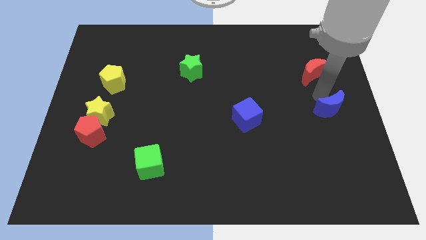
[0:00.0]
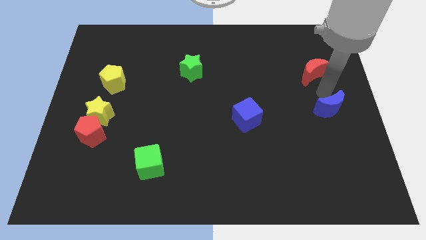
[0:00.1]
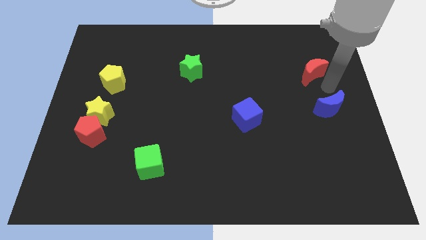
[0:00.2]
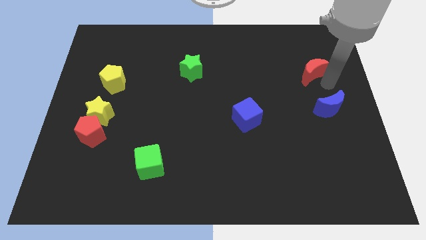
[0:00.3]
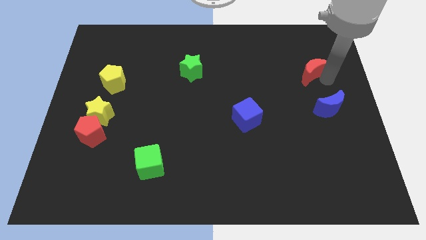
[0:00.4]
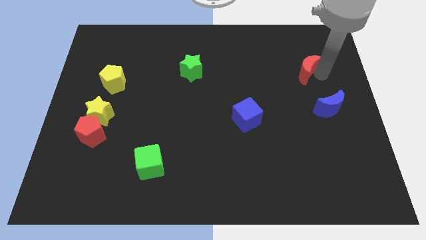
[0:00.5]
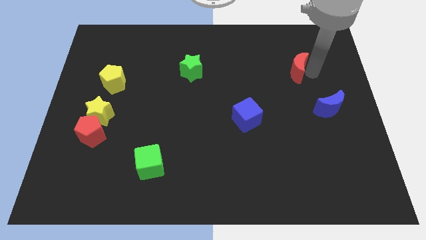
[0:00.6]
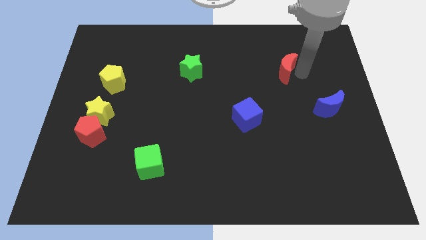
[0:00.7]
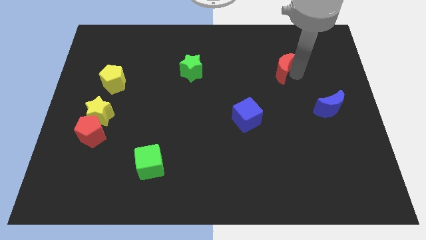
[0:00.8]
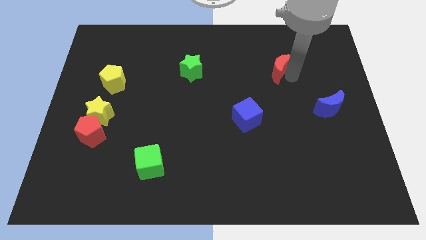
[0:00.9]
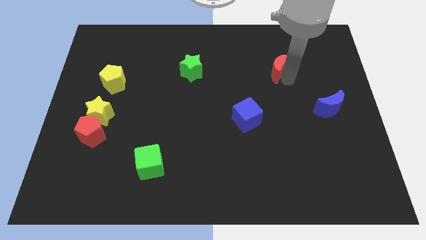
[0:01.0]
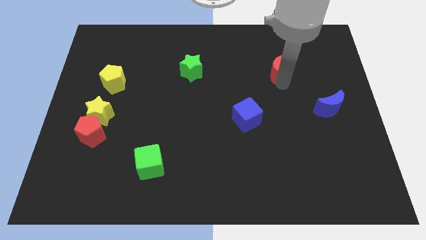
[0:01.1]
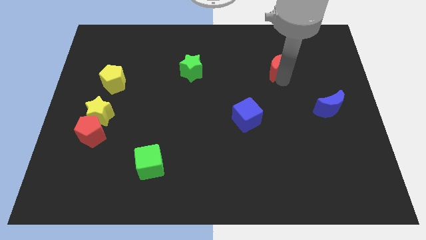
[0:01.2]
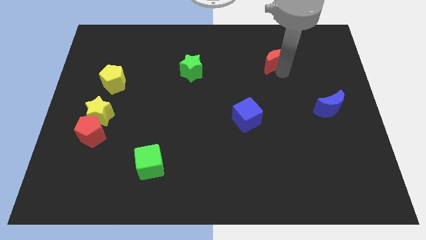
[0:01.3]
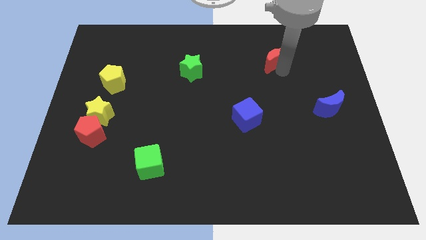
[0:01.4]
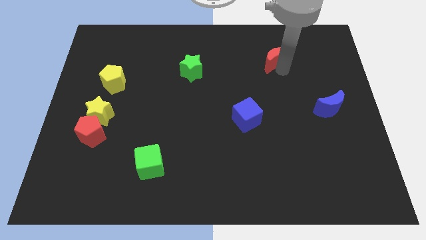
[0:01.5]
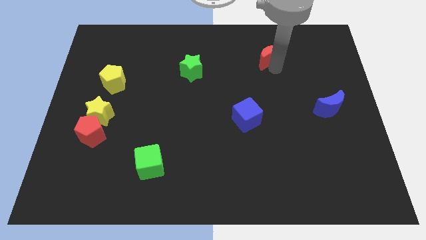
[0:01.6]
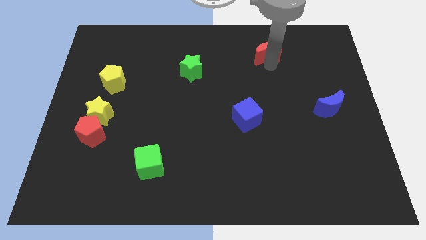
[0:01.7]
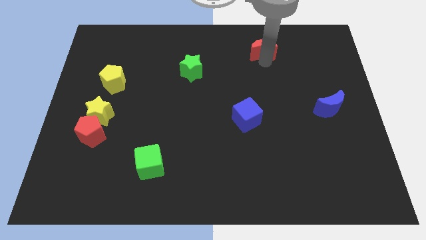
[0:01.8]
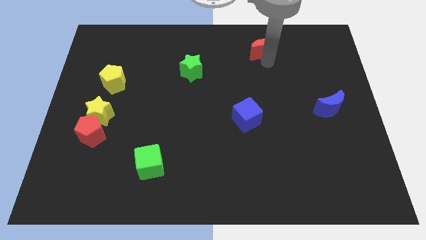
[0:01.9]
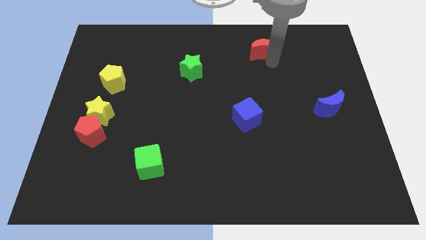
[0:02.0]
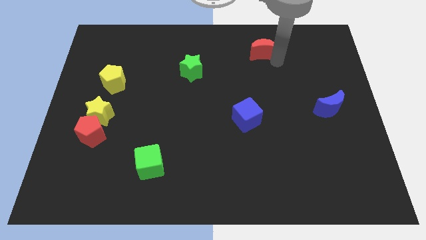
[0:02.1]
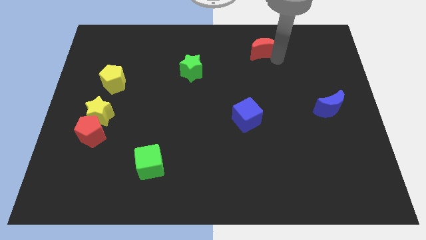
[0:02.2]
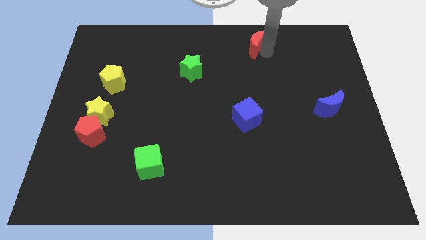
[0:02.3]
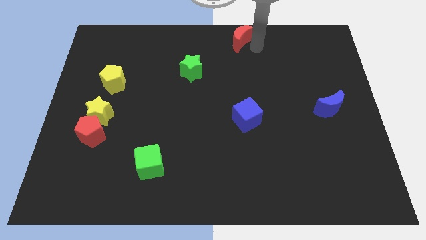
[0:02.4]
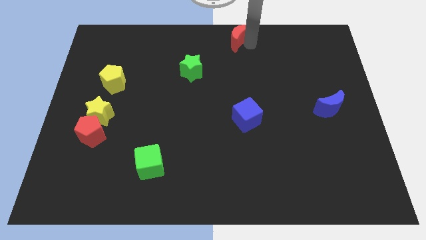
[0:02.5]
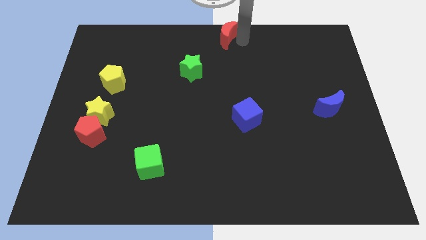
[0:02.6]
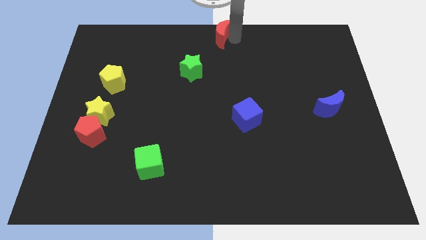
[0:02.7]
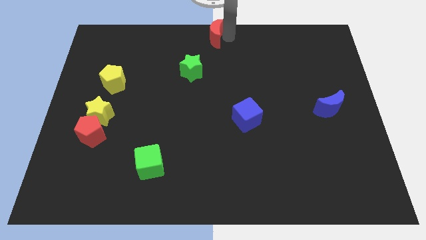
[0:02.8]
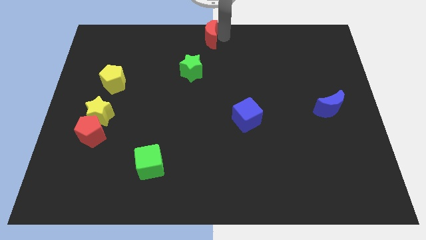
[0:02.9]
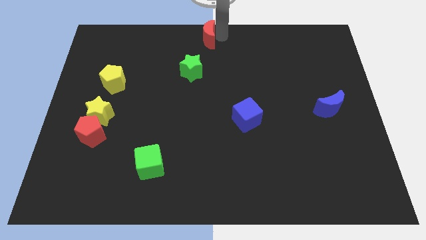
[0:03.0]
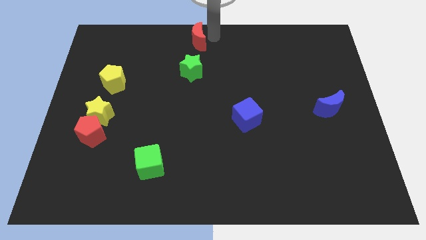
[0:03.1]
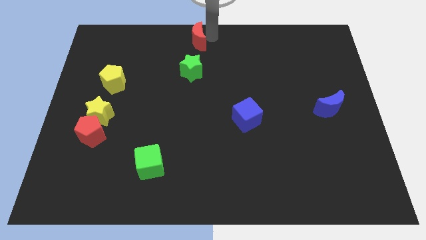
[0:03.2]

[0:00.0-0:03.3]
move the red moon to the top center

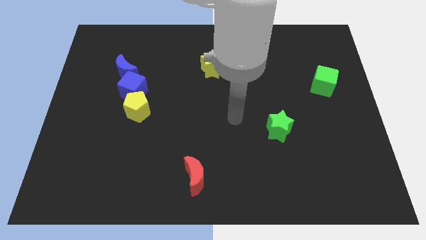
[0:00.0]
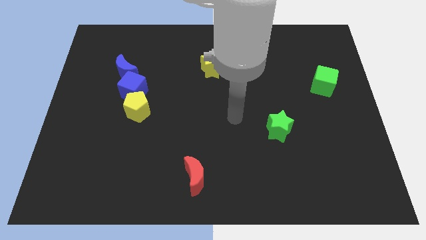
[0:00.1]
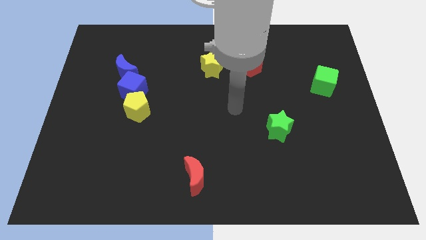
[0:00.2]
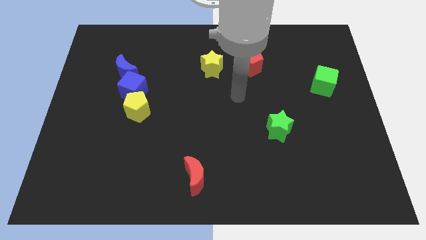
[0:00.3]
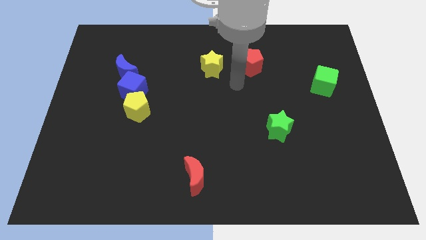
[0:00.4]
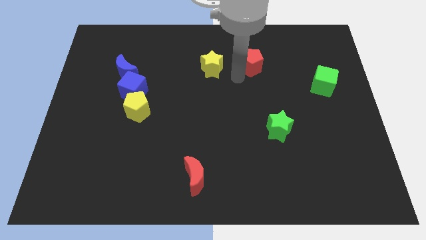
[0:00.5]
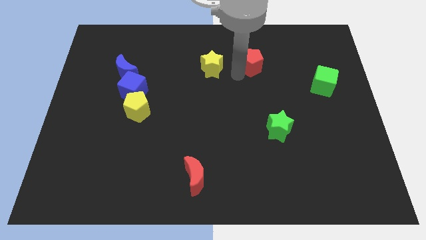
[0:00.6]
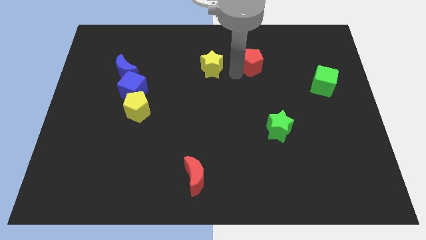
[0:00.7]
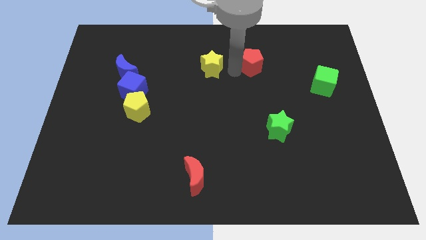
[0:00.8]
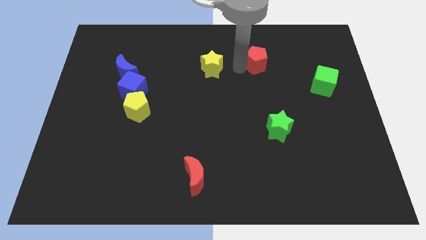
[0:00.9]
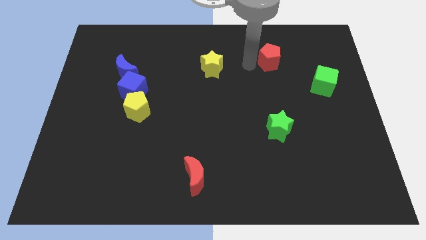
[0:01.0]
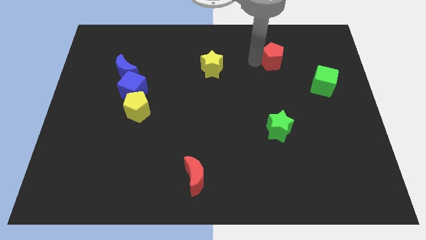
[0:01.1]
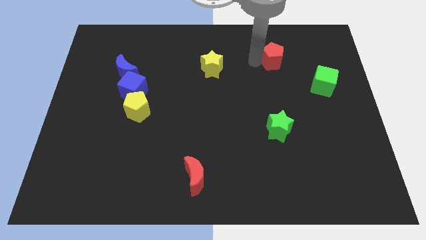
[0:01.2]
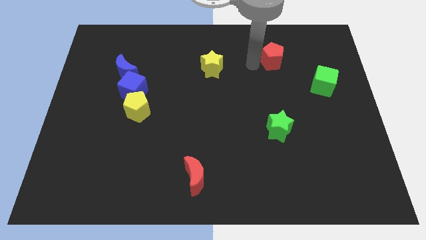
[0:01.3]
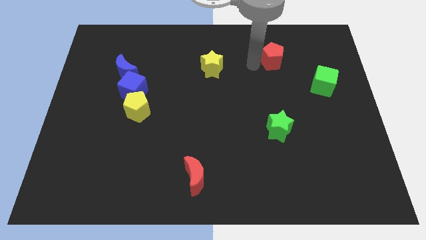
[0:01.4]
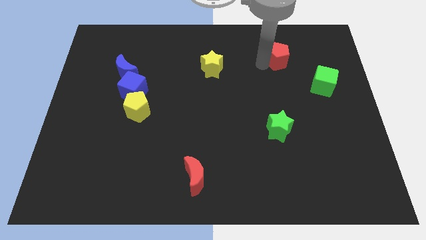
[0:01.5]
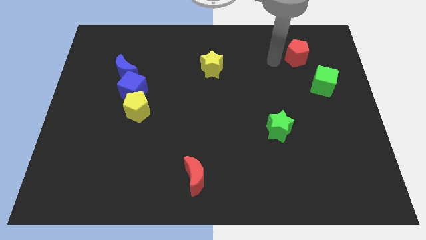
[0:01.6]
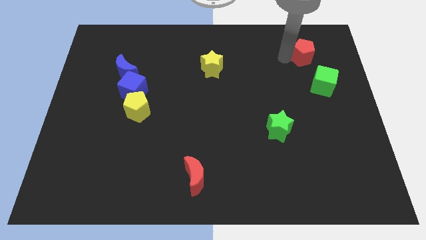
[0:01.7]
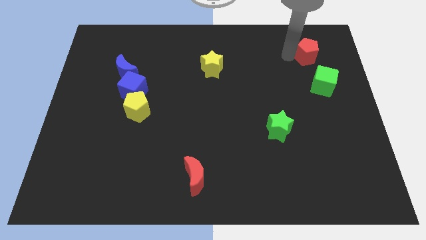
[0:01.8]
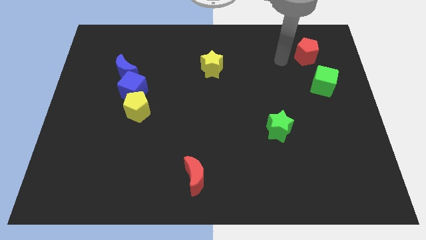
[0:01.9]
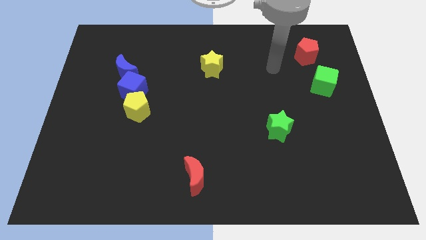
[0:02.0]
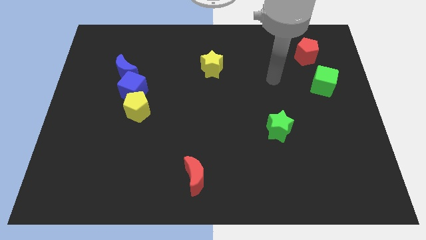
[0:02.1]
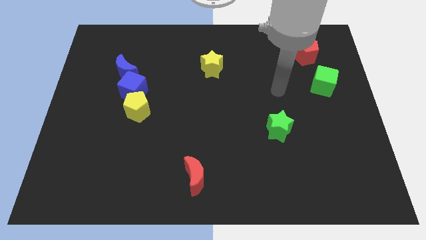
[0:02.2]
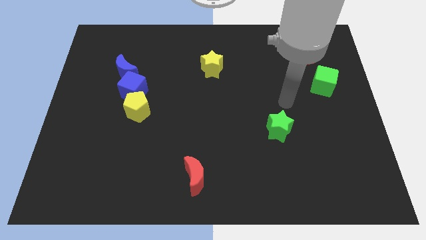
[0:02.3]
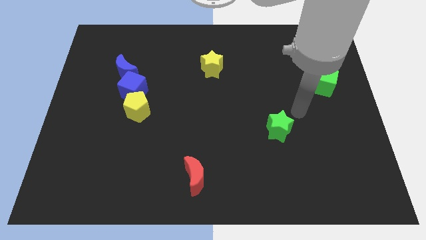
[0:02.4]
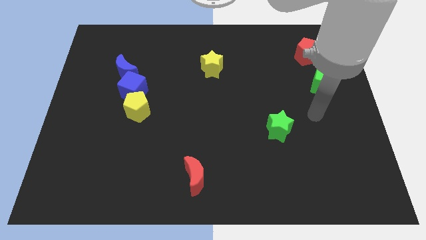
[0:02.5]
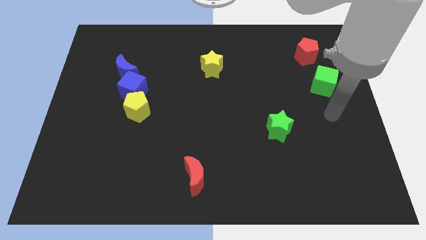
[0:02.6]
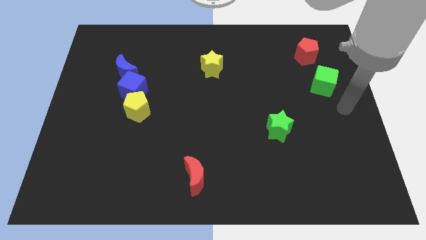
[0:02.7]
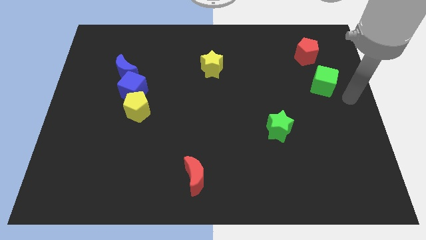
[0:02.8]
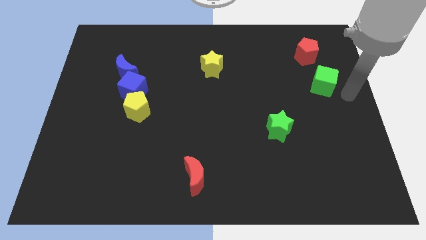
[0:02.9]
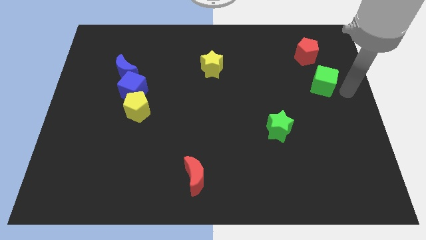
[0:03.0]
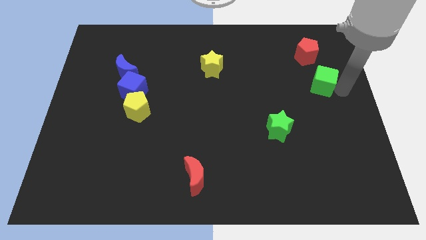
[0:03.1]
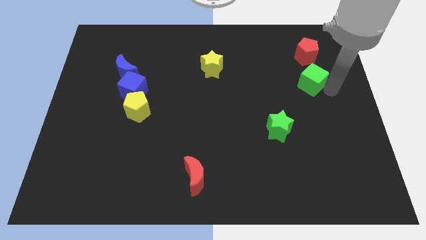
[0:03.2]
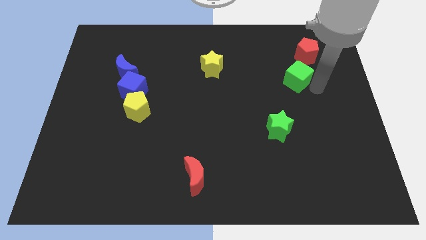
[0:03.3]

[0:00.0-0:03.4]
move green cube below the red pentagon

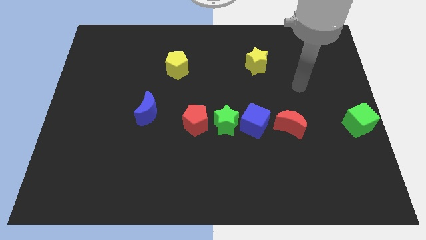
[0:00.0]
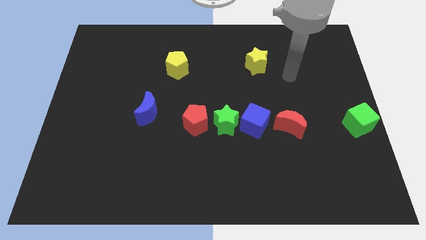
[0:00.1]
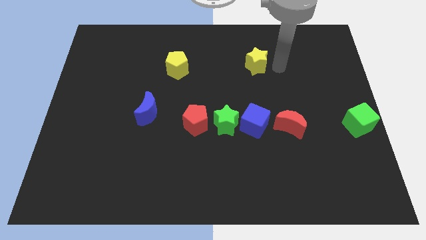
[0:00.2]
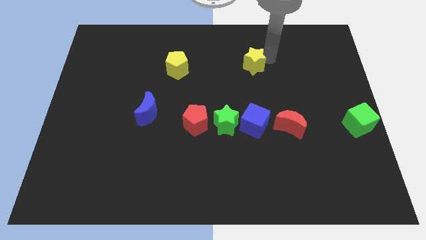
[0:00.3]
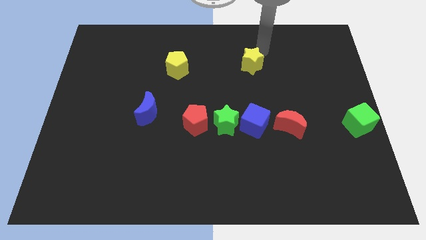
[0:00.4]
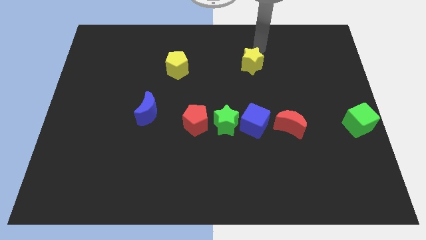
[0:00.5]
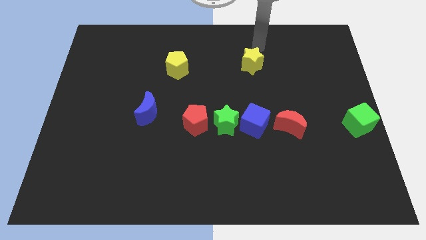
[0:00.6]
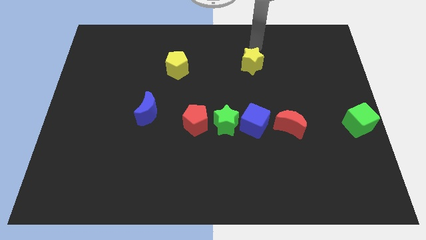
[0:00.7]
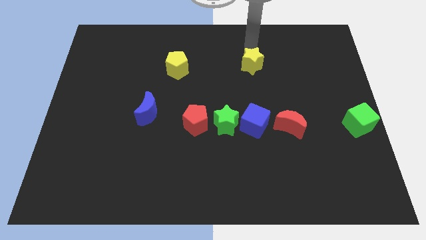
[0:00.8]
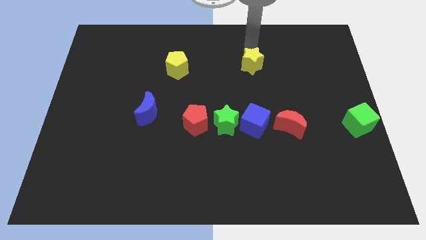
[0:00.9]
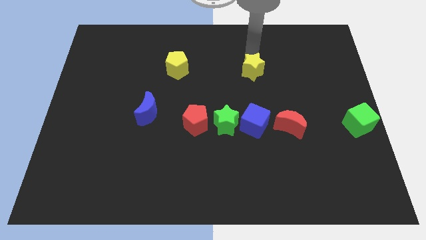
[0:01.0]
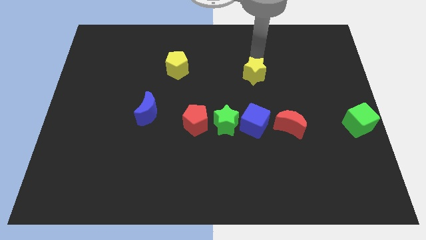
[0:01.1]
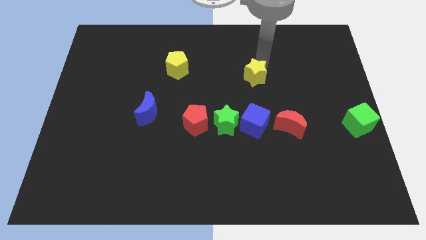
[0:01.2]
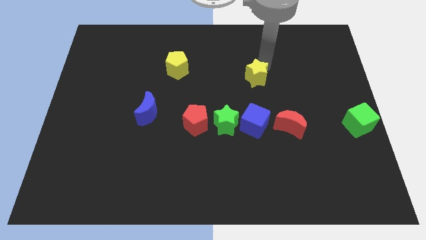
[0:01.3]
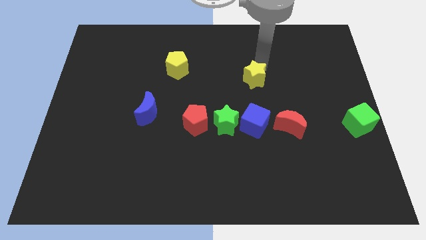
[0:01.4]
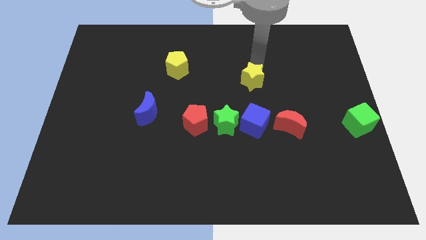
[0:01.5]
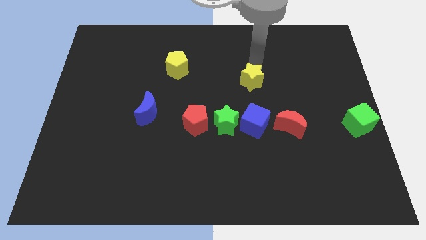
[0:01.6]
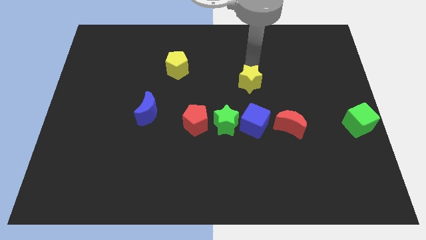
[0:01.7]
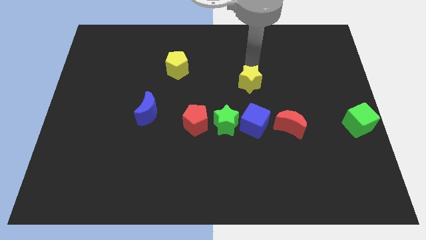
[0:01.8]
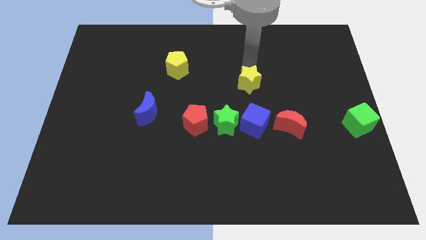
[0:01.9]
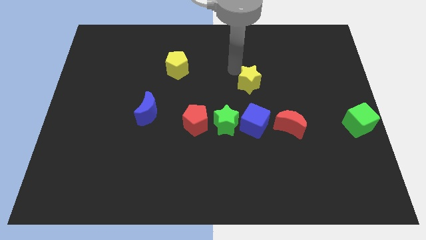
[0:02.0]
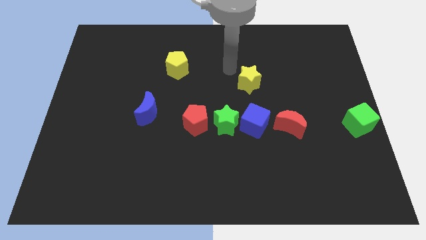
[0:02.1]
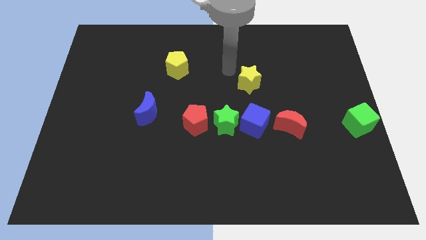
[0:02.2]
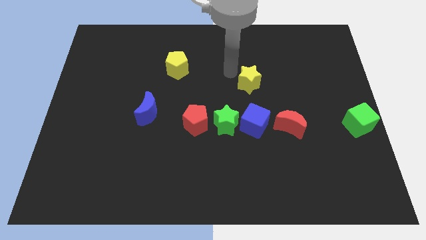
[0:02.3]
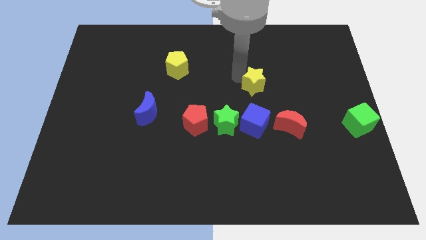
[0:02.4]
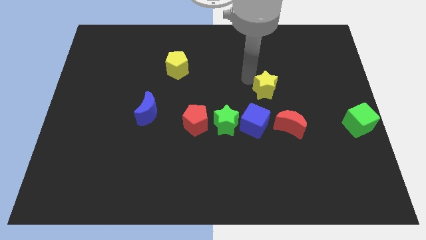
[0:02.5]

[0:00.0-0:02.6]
push the yellow star to the vertical top side of the blue cube
